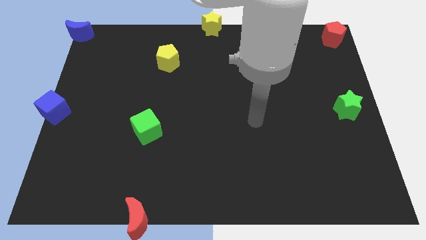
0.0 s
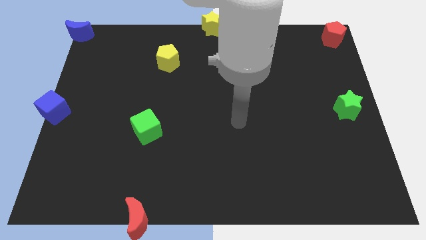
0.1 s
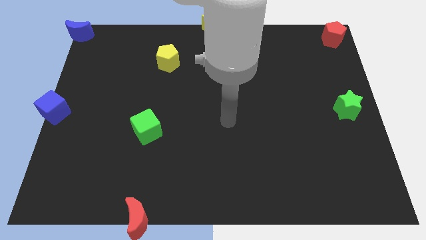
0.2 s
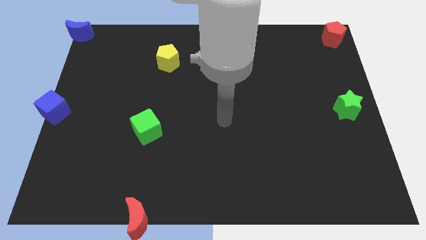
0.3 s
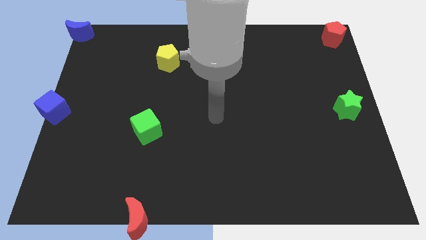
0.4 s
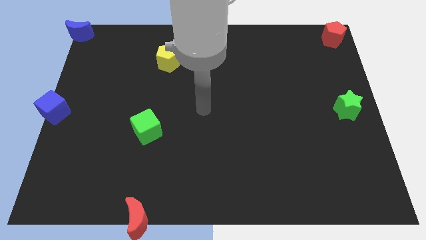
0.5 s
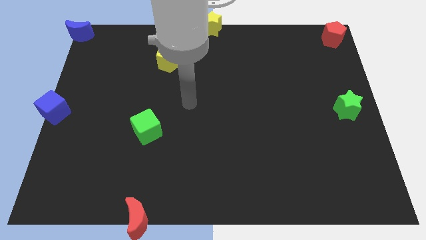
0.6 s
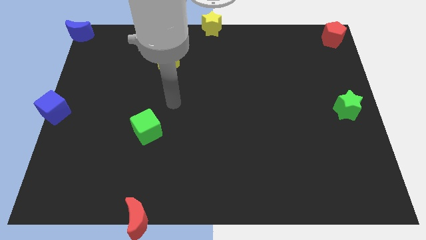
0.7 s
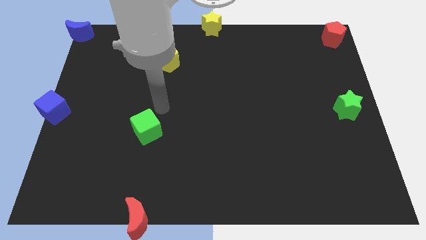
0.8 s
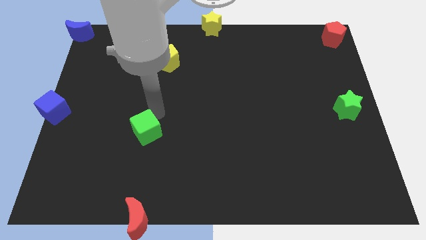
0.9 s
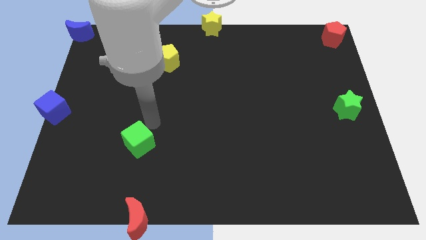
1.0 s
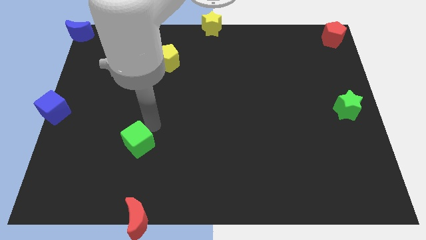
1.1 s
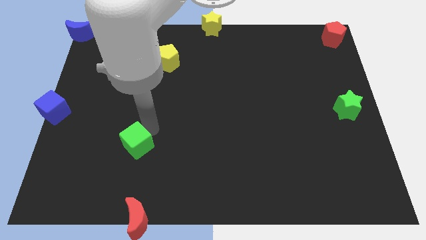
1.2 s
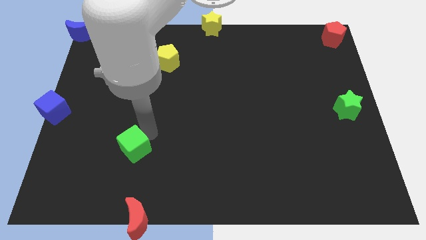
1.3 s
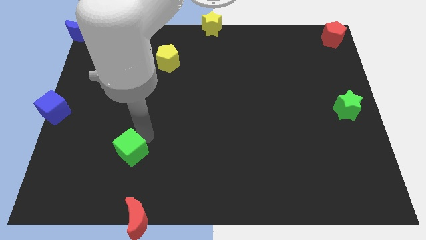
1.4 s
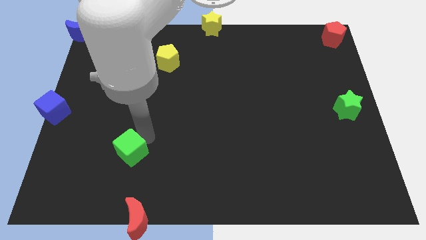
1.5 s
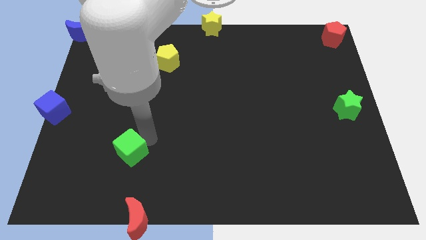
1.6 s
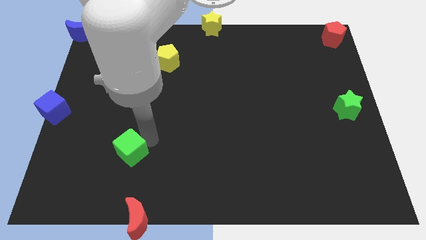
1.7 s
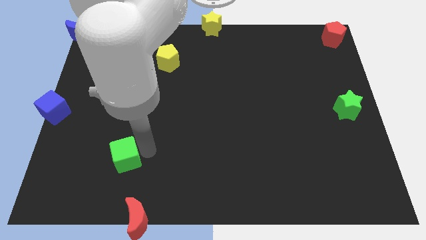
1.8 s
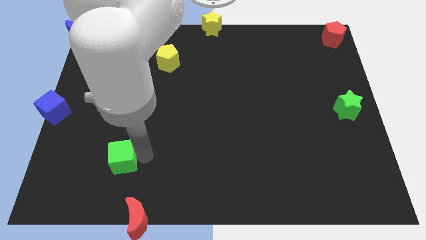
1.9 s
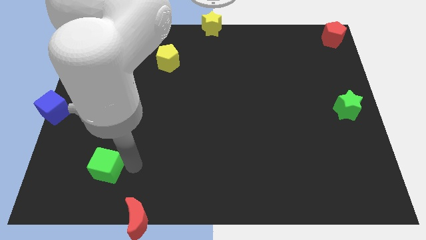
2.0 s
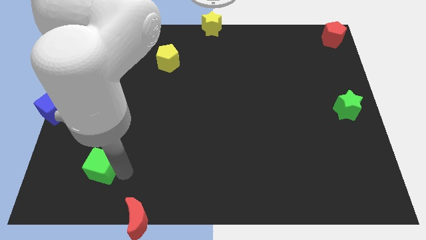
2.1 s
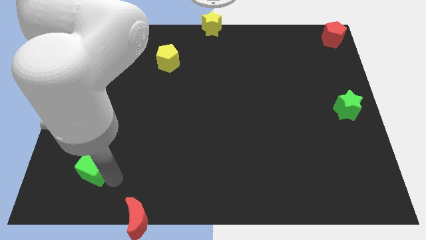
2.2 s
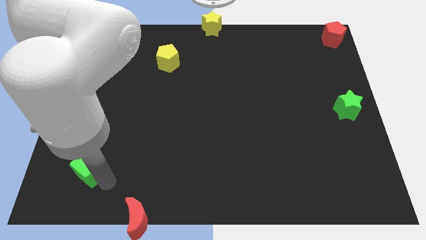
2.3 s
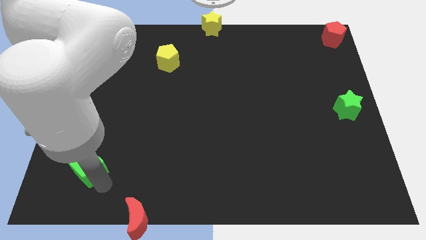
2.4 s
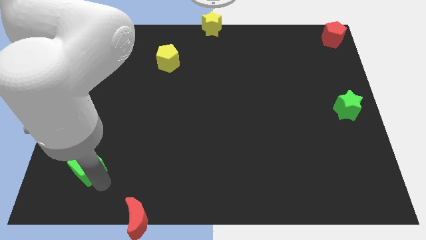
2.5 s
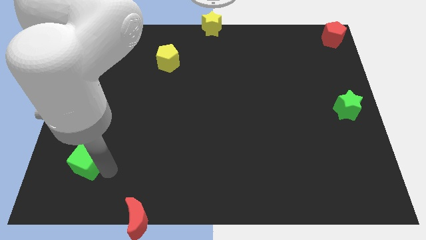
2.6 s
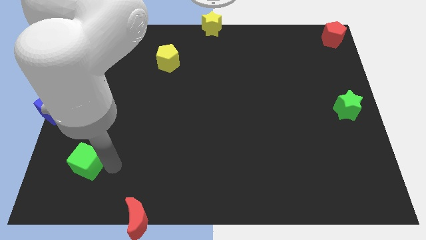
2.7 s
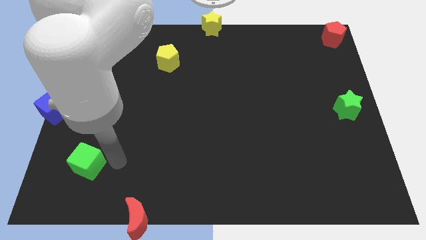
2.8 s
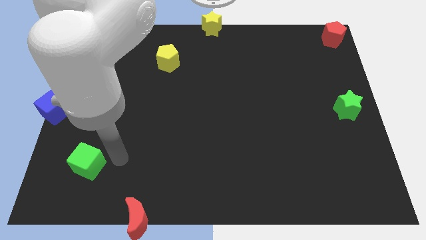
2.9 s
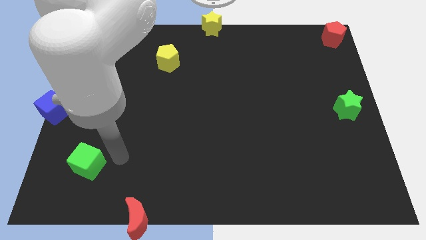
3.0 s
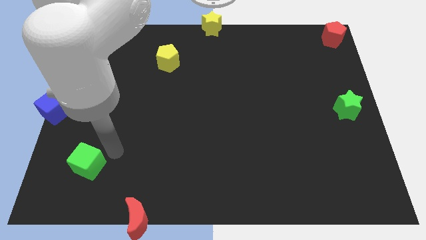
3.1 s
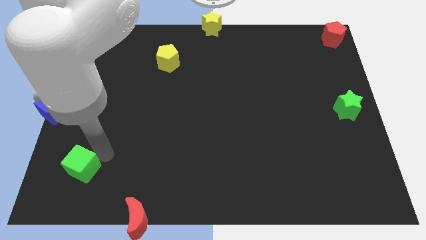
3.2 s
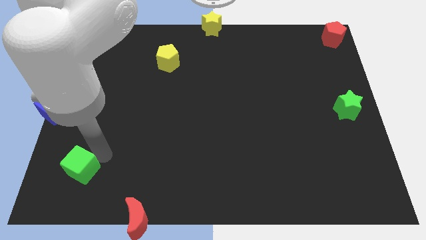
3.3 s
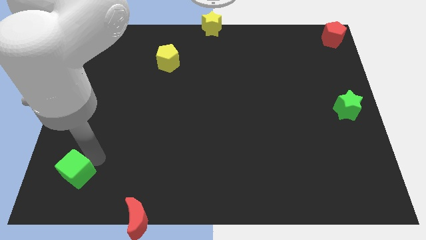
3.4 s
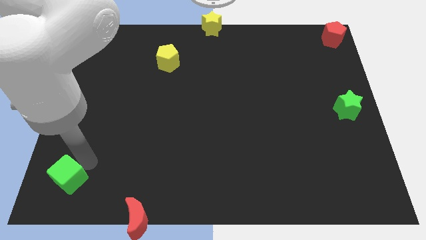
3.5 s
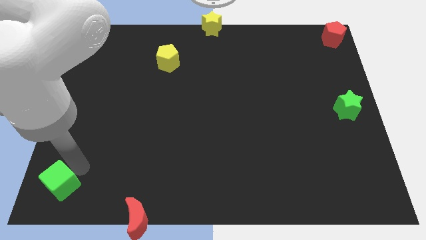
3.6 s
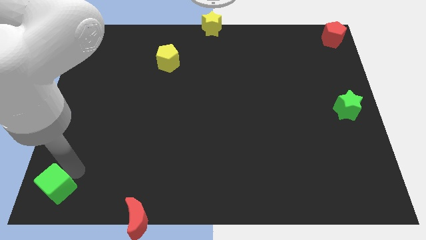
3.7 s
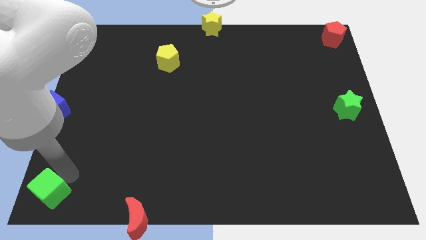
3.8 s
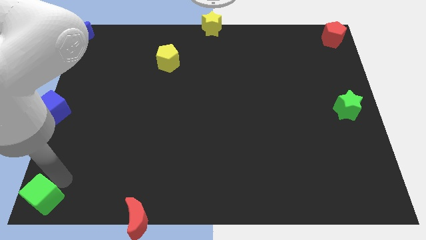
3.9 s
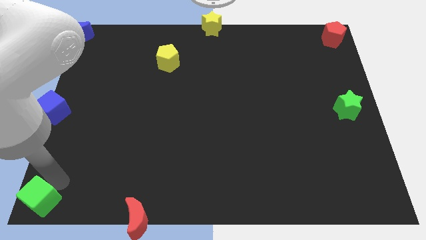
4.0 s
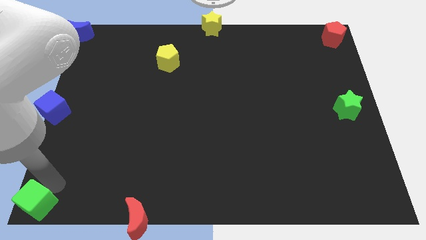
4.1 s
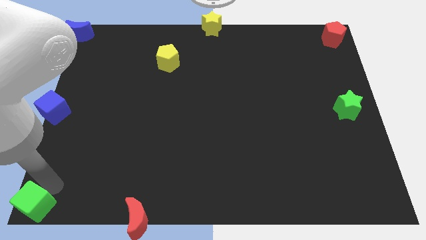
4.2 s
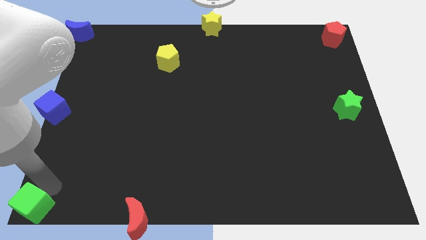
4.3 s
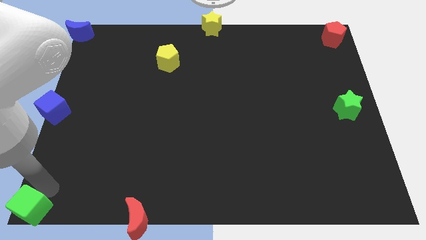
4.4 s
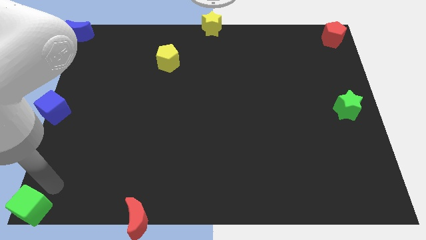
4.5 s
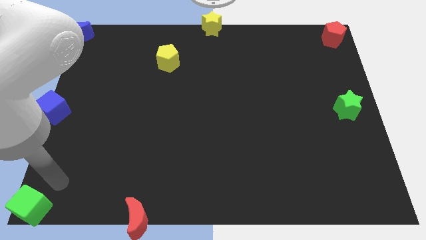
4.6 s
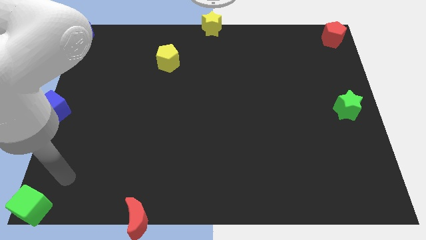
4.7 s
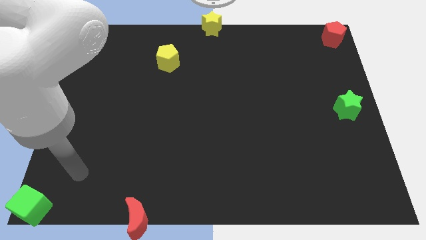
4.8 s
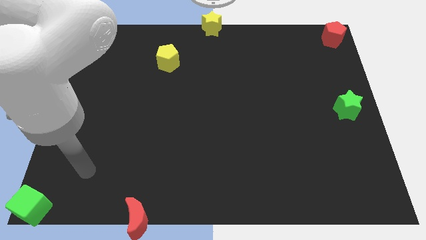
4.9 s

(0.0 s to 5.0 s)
push the green cube horizontally to the left side of the red moon

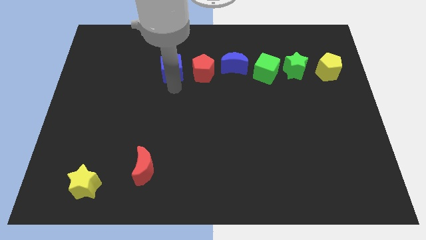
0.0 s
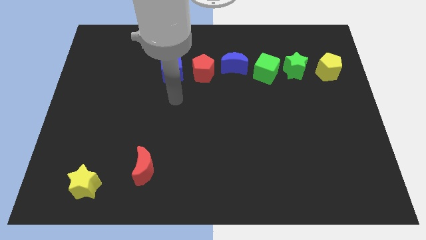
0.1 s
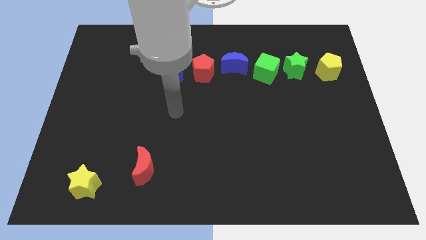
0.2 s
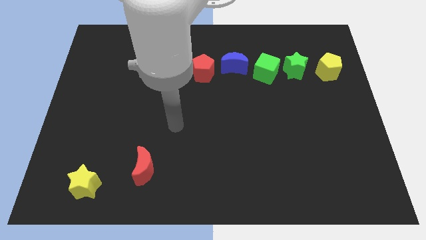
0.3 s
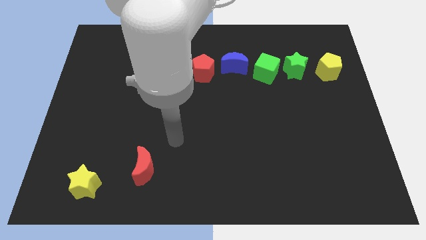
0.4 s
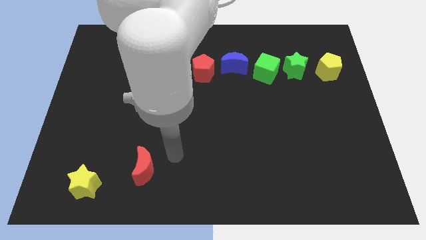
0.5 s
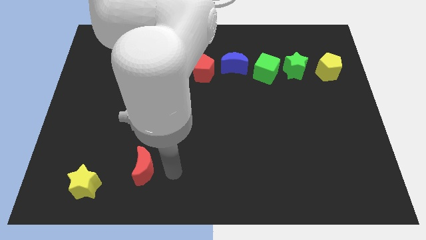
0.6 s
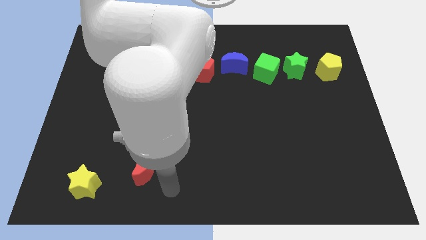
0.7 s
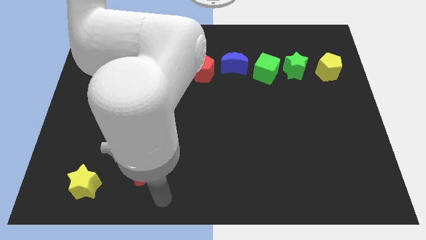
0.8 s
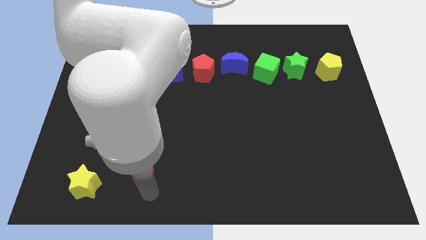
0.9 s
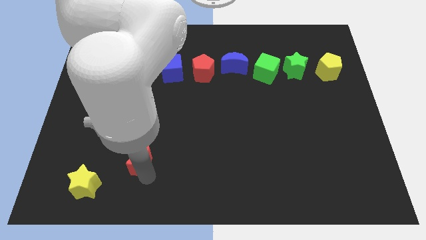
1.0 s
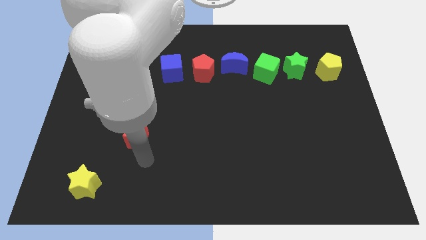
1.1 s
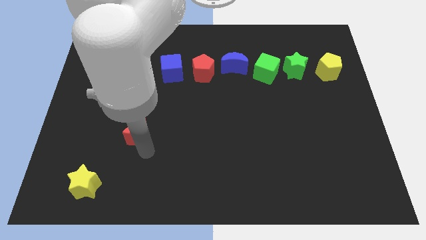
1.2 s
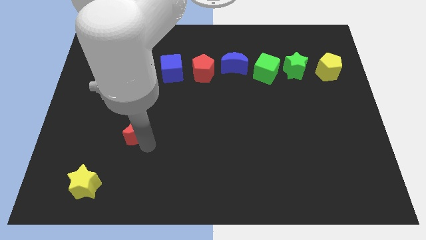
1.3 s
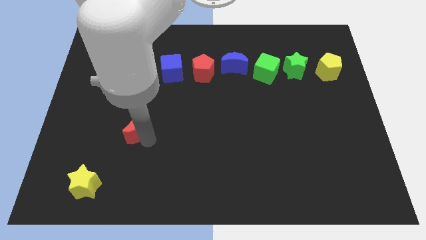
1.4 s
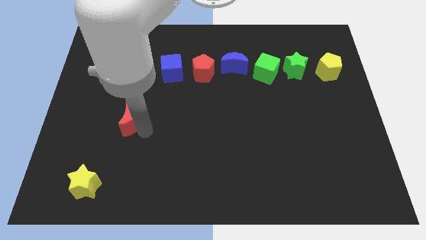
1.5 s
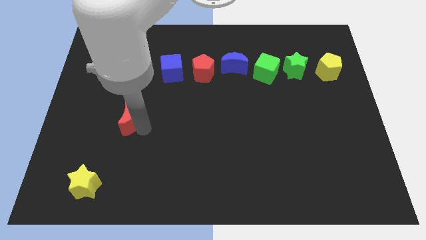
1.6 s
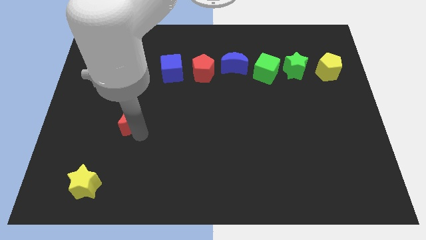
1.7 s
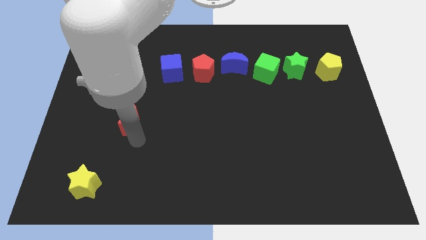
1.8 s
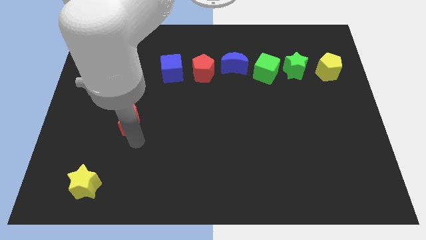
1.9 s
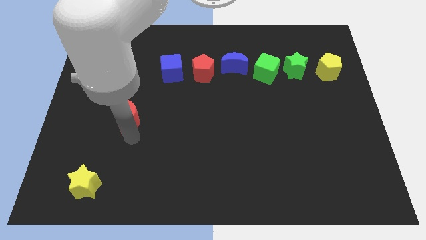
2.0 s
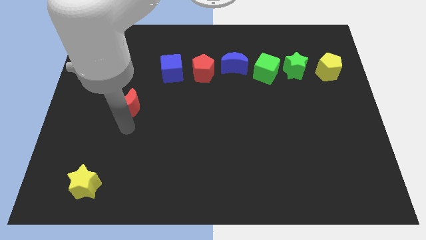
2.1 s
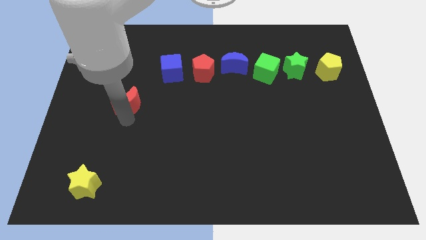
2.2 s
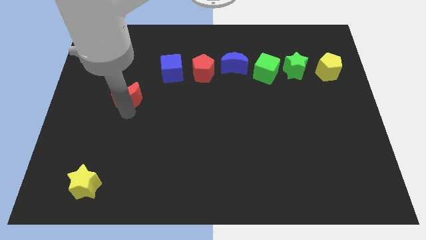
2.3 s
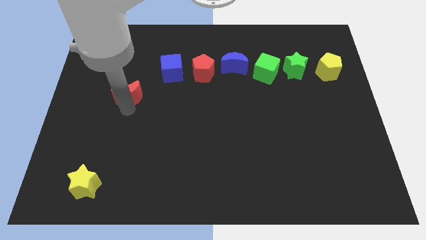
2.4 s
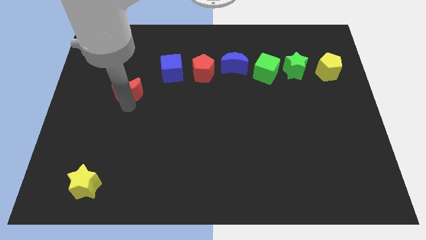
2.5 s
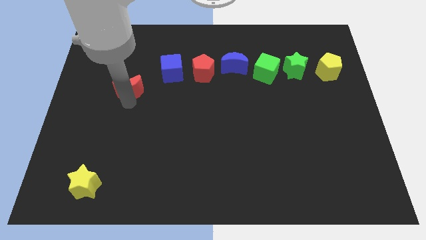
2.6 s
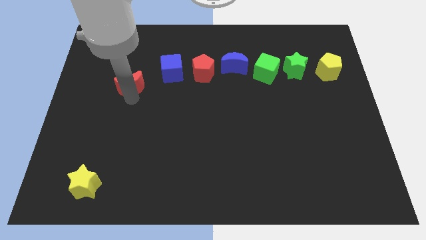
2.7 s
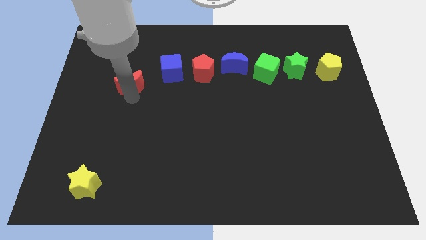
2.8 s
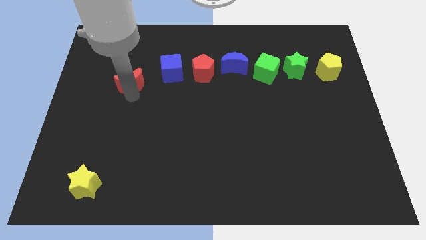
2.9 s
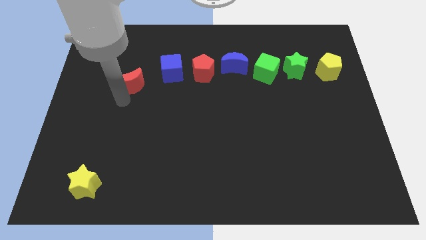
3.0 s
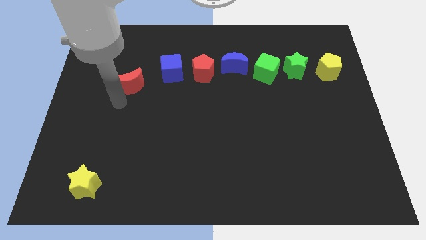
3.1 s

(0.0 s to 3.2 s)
place the red moon left to the blue cube

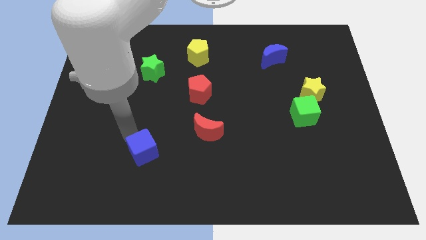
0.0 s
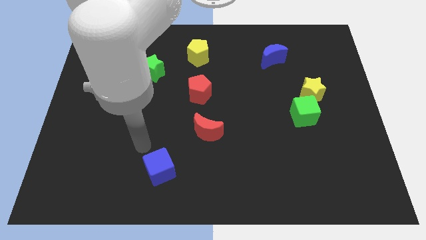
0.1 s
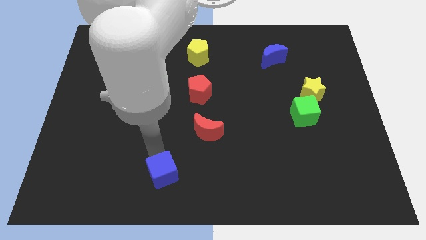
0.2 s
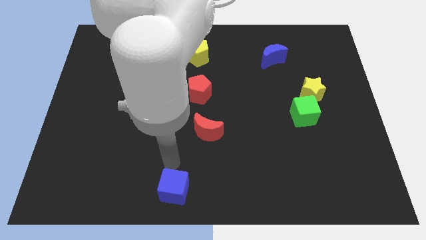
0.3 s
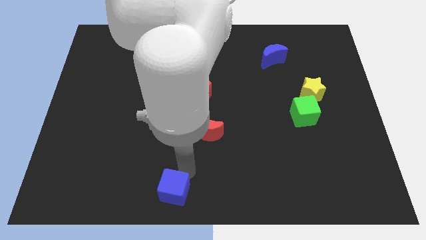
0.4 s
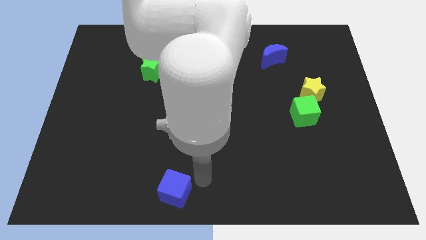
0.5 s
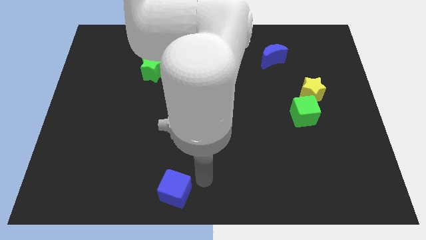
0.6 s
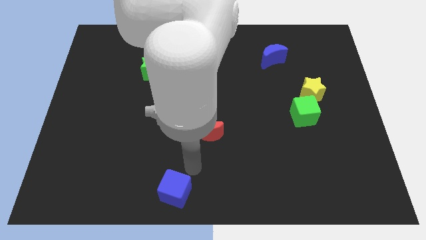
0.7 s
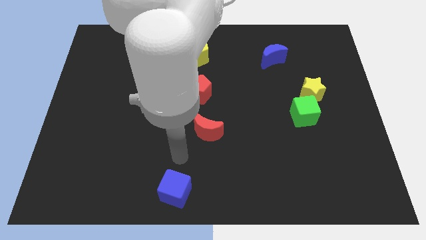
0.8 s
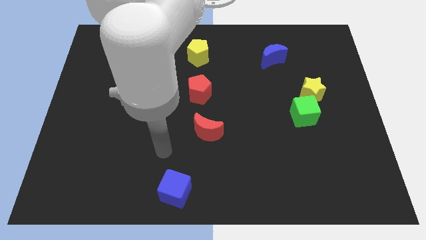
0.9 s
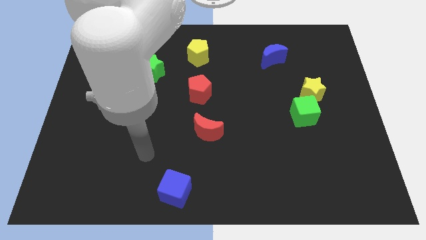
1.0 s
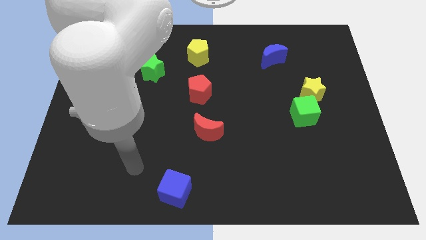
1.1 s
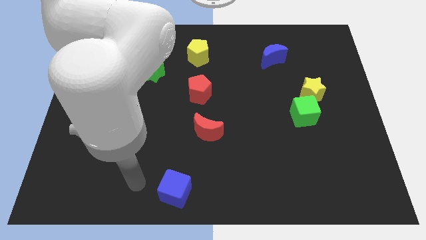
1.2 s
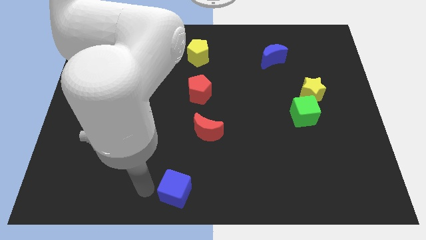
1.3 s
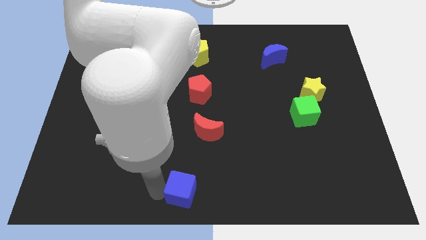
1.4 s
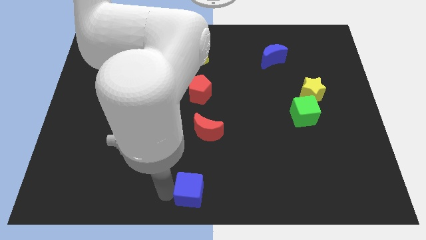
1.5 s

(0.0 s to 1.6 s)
place blue cube below the red crescent
